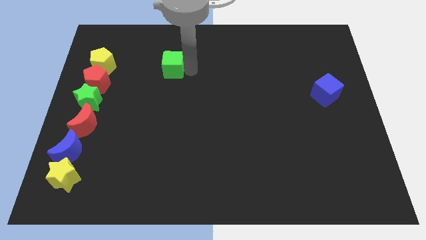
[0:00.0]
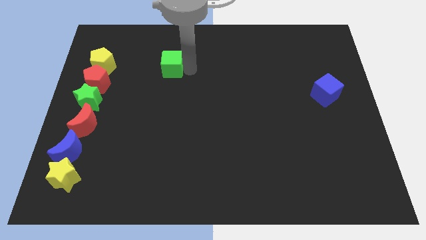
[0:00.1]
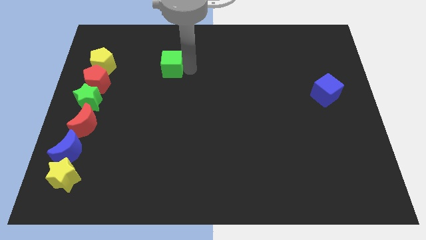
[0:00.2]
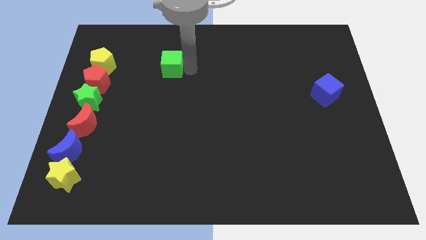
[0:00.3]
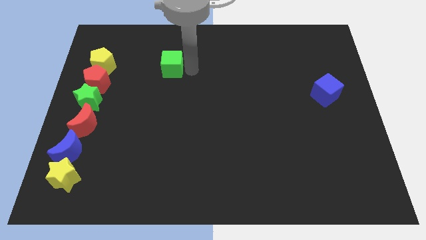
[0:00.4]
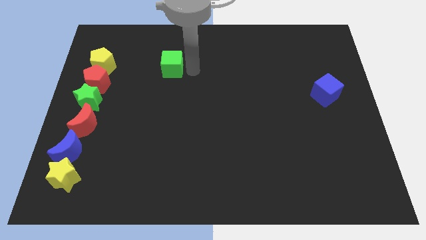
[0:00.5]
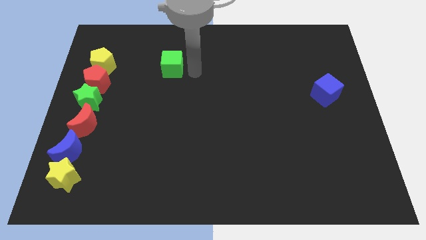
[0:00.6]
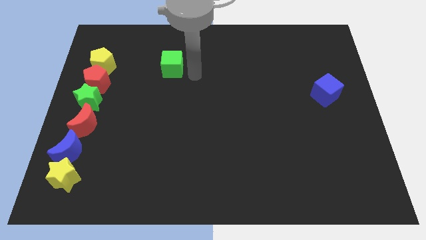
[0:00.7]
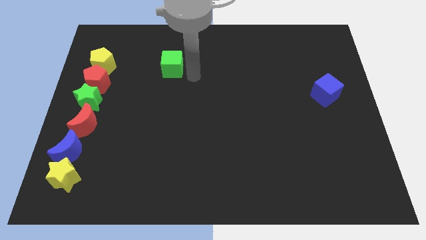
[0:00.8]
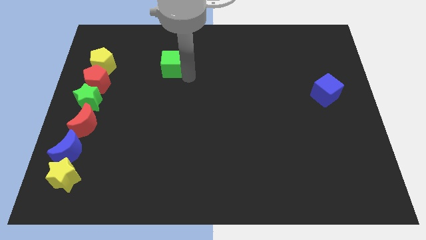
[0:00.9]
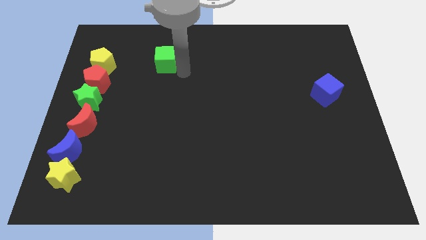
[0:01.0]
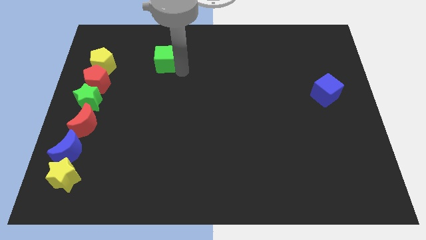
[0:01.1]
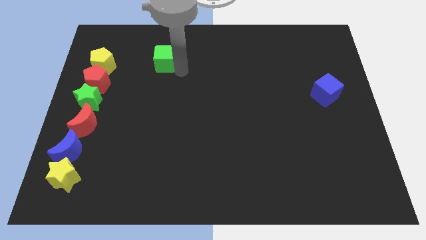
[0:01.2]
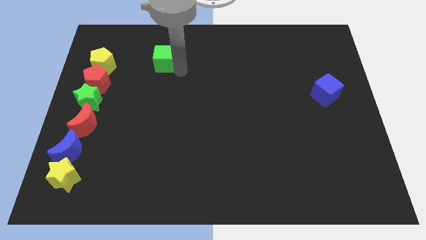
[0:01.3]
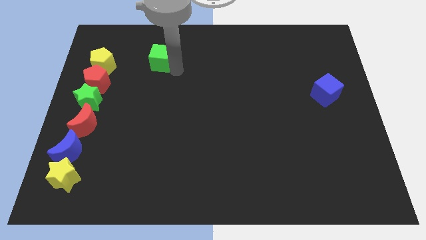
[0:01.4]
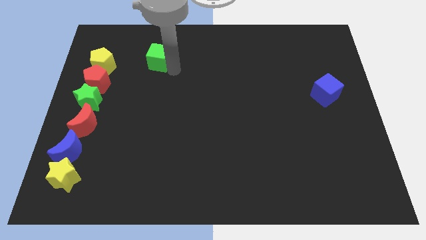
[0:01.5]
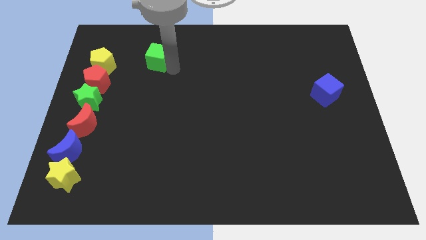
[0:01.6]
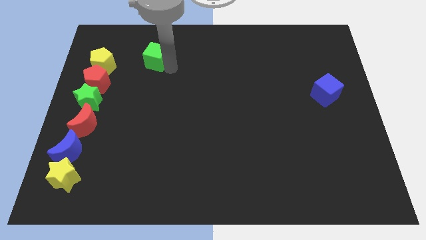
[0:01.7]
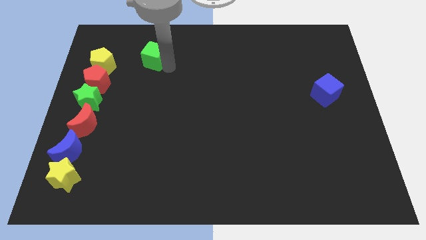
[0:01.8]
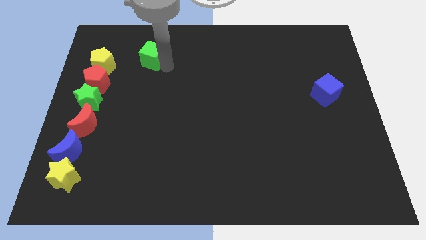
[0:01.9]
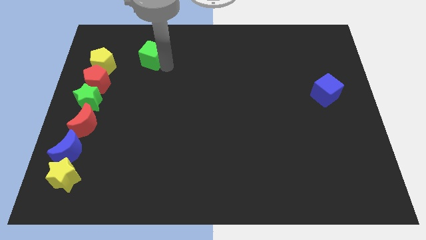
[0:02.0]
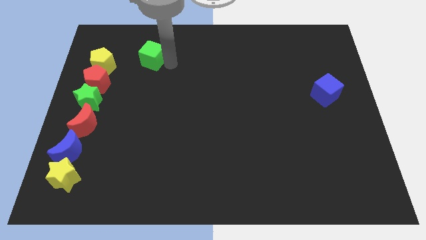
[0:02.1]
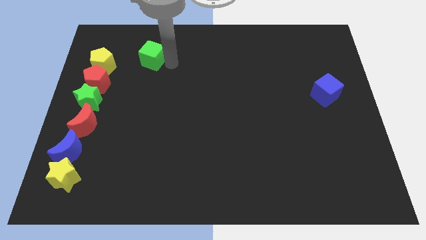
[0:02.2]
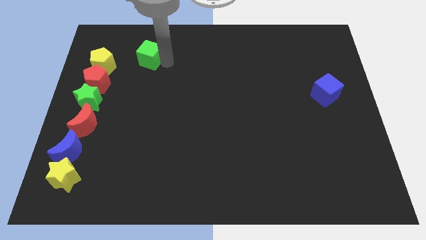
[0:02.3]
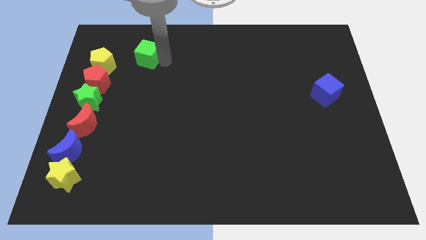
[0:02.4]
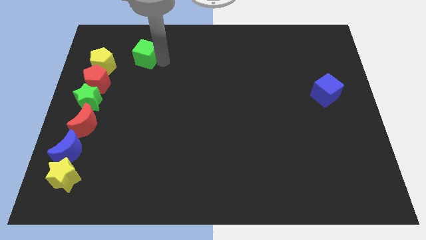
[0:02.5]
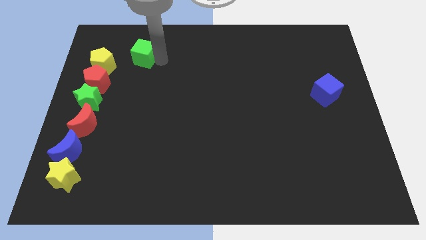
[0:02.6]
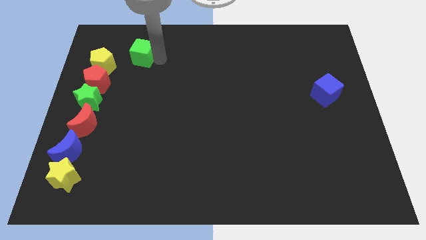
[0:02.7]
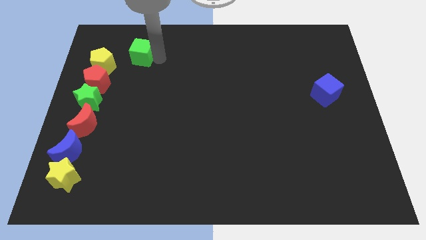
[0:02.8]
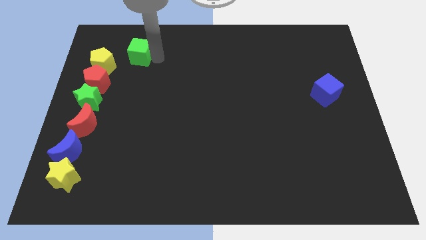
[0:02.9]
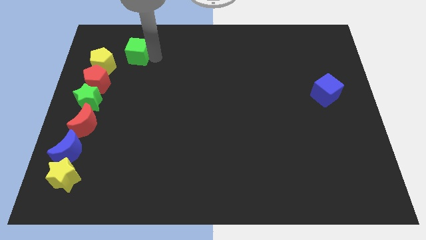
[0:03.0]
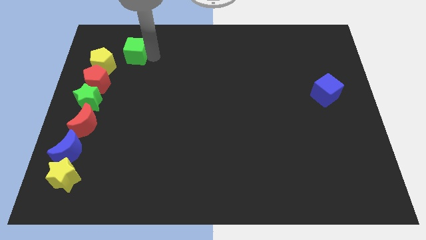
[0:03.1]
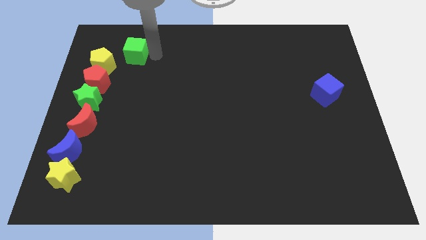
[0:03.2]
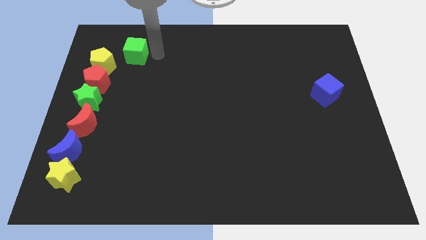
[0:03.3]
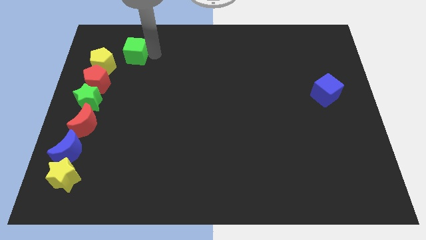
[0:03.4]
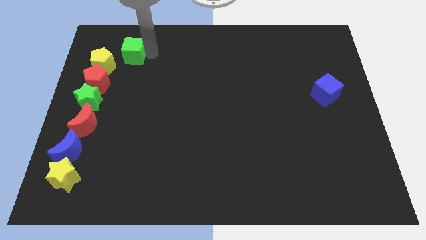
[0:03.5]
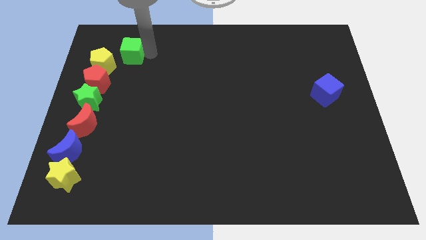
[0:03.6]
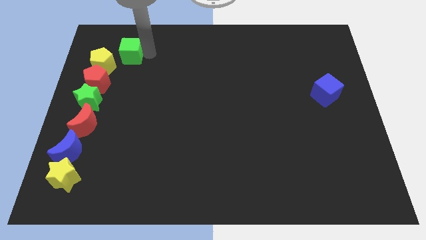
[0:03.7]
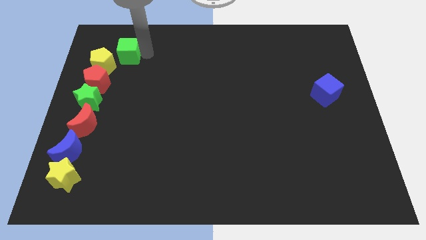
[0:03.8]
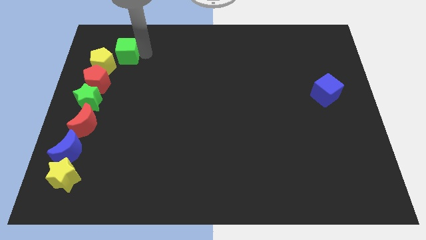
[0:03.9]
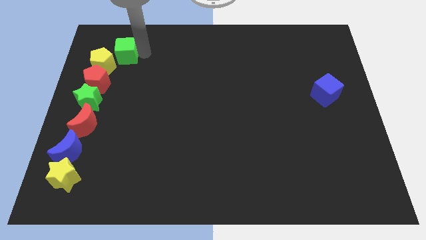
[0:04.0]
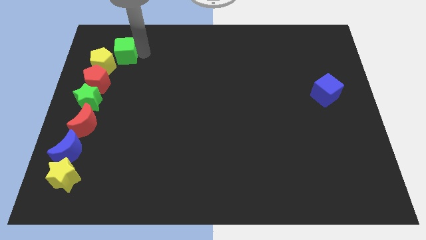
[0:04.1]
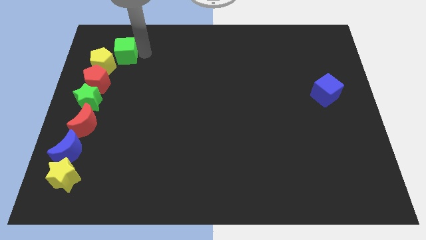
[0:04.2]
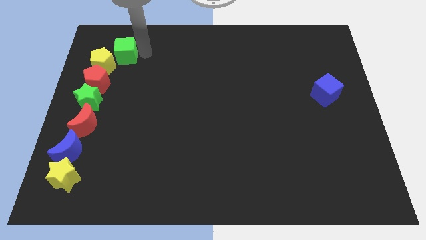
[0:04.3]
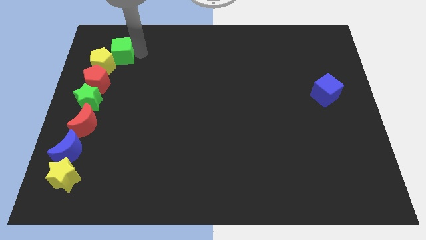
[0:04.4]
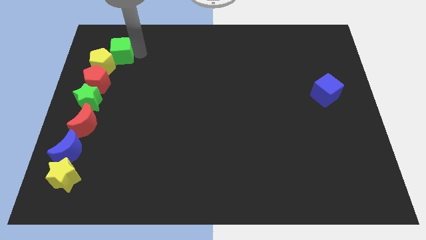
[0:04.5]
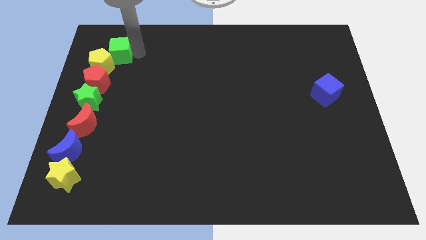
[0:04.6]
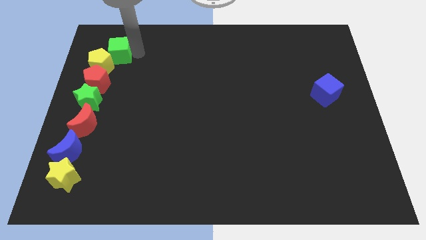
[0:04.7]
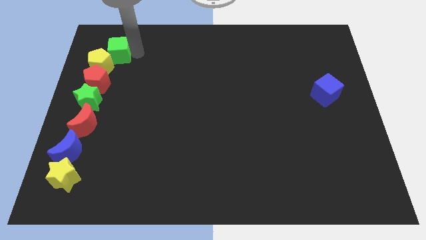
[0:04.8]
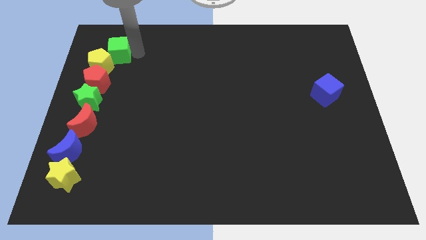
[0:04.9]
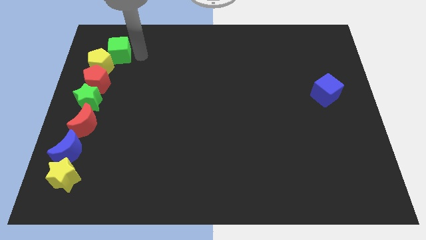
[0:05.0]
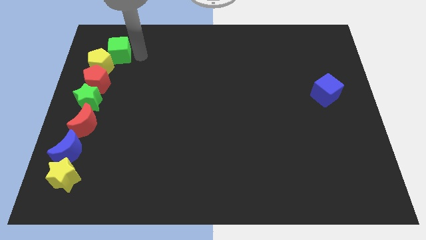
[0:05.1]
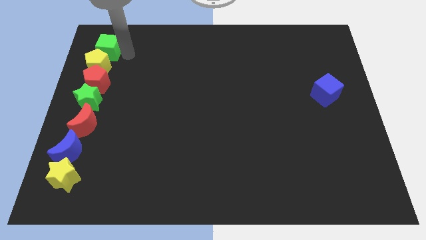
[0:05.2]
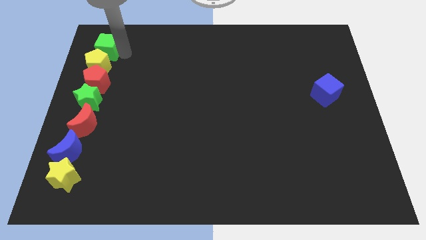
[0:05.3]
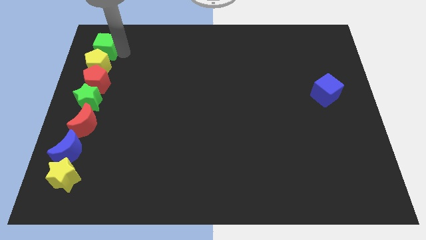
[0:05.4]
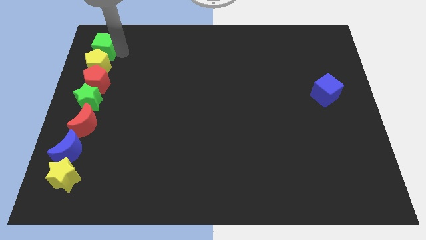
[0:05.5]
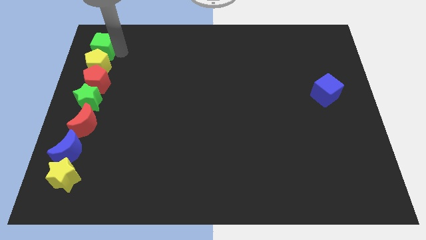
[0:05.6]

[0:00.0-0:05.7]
place green cube to the top of the yellow pentagon

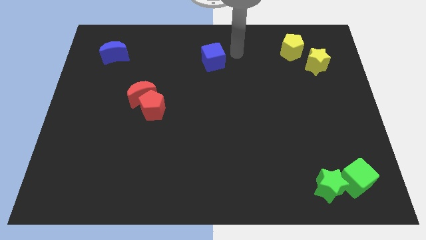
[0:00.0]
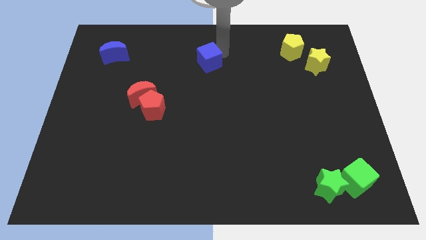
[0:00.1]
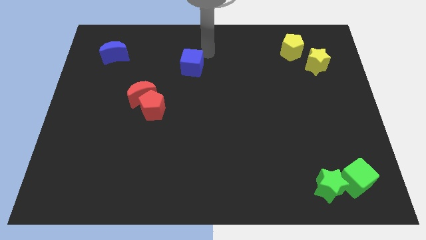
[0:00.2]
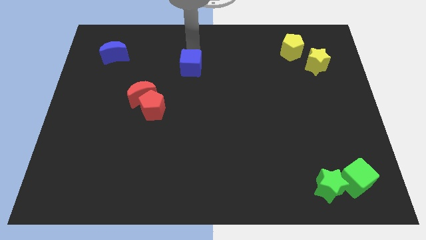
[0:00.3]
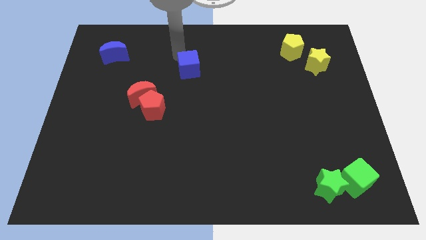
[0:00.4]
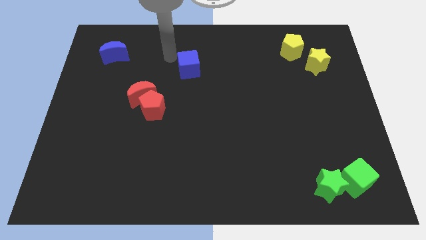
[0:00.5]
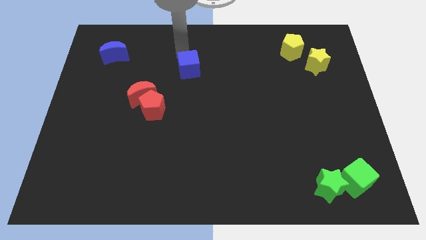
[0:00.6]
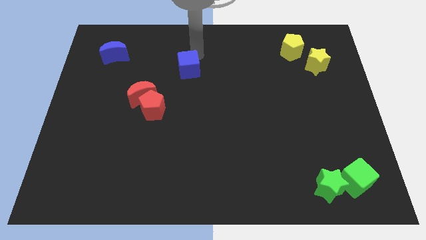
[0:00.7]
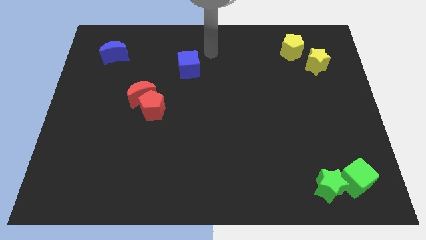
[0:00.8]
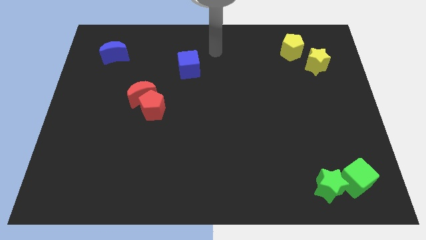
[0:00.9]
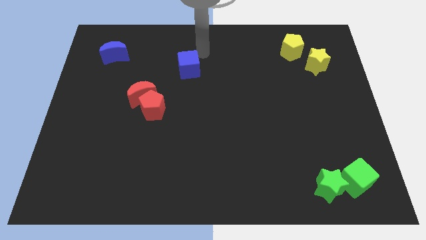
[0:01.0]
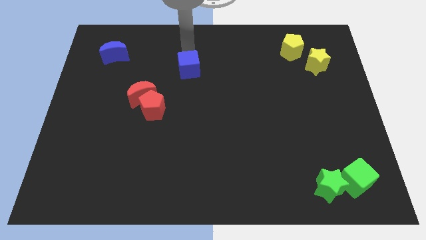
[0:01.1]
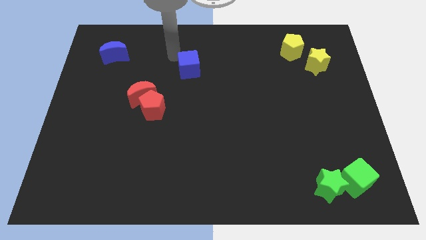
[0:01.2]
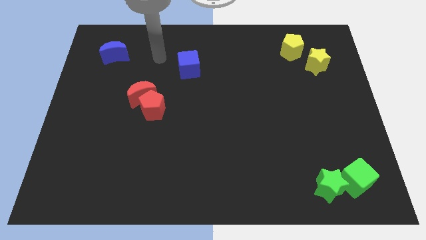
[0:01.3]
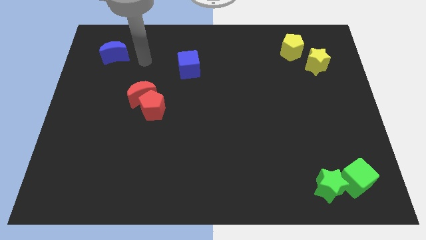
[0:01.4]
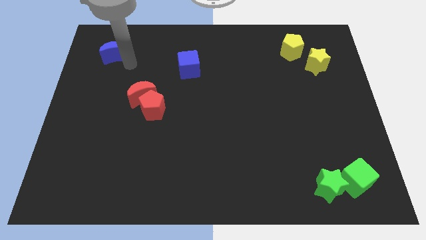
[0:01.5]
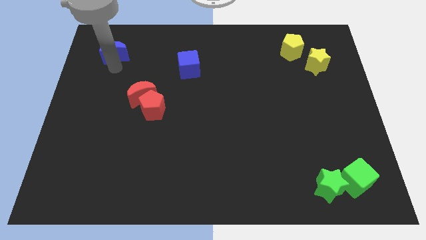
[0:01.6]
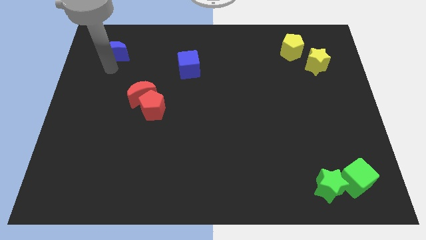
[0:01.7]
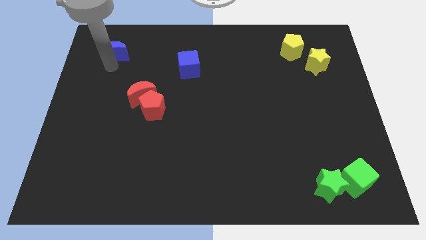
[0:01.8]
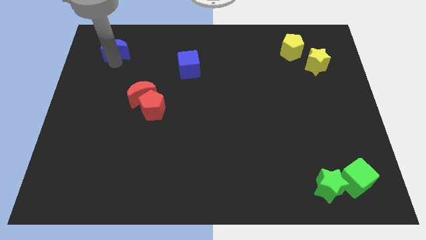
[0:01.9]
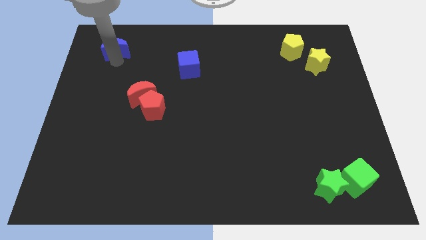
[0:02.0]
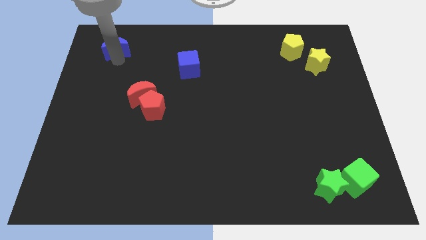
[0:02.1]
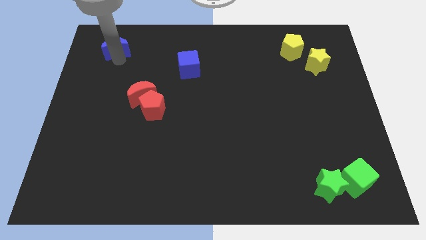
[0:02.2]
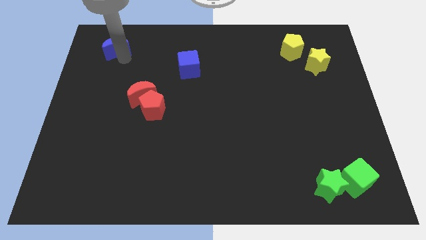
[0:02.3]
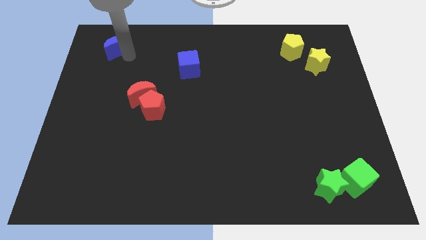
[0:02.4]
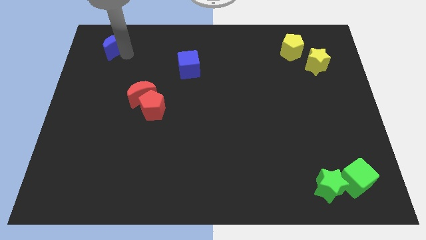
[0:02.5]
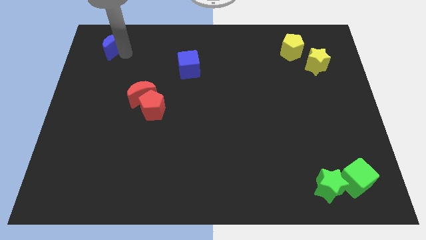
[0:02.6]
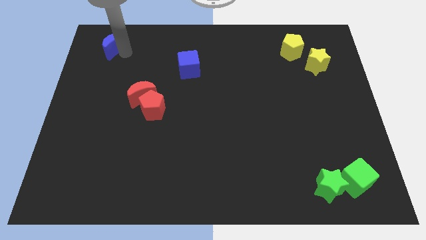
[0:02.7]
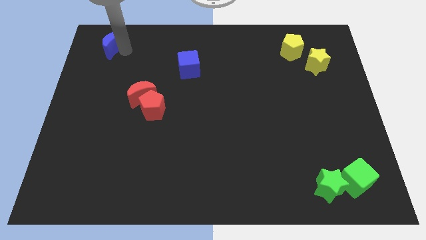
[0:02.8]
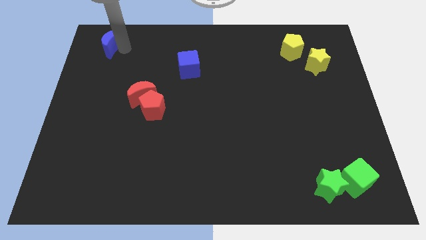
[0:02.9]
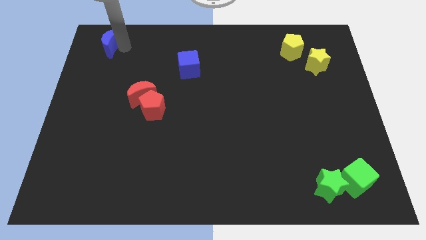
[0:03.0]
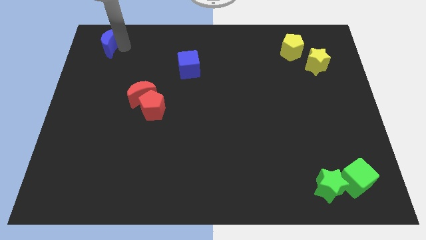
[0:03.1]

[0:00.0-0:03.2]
push blue cube to the top left corner of the board
